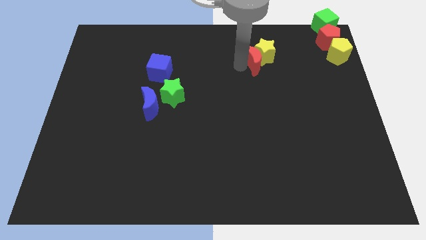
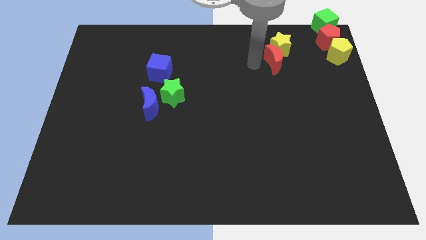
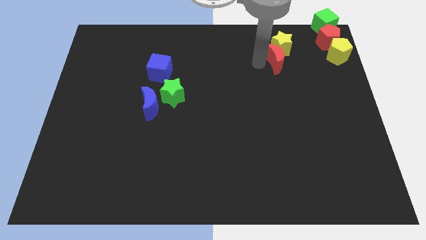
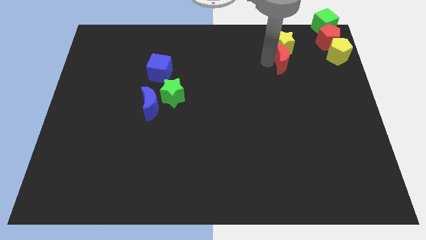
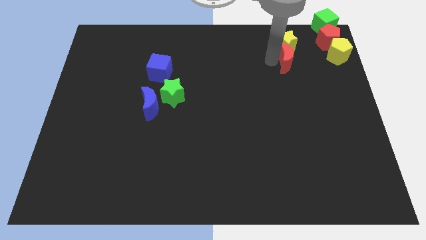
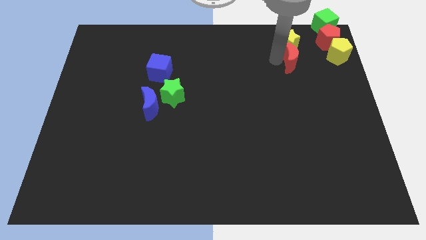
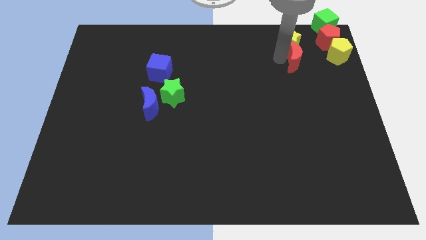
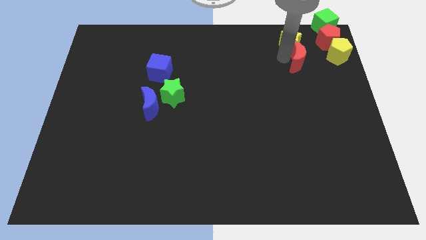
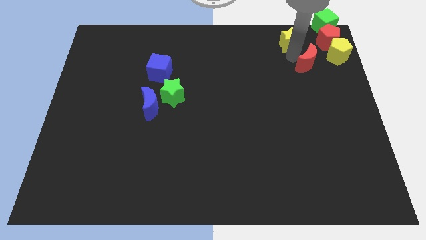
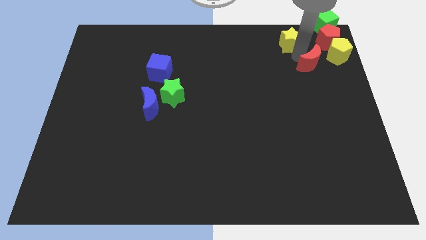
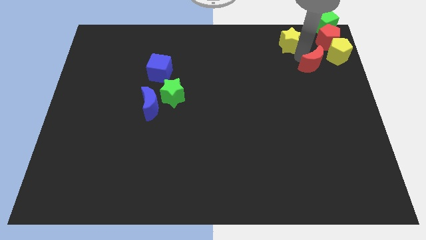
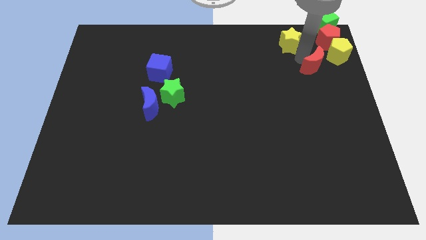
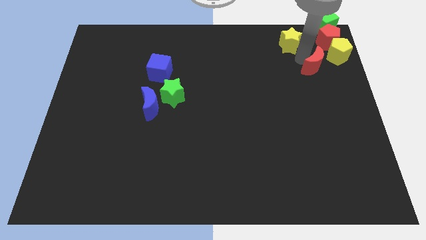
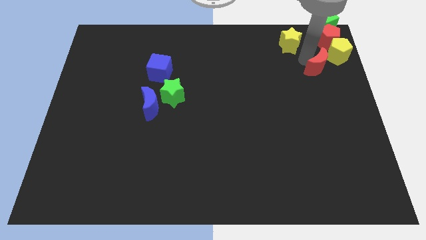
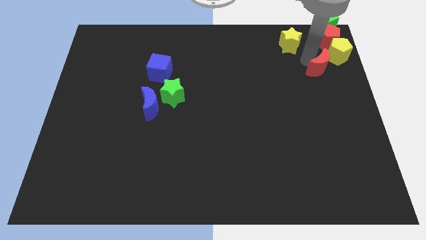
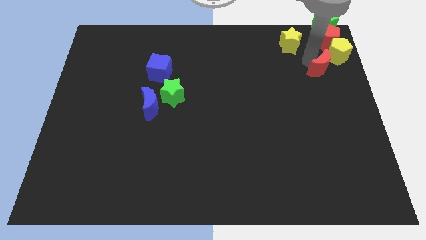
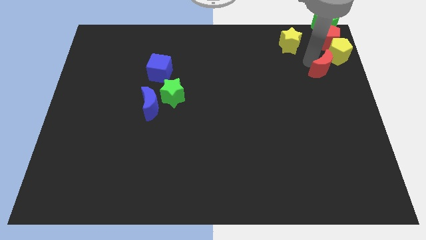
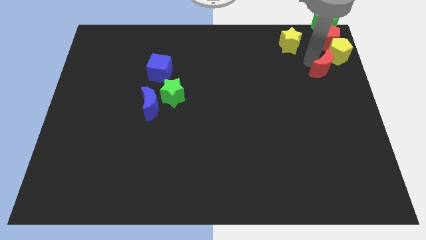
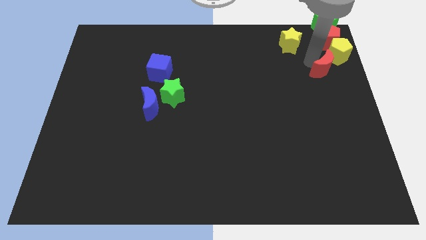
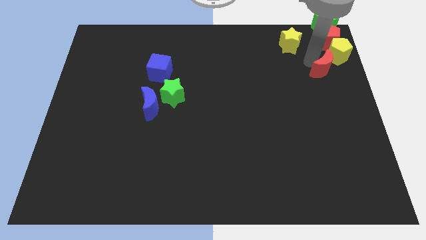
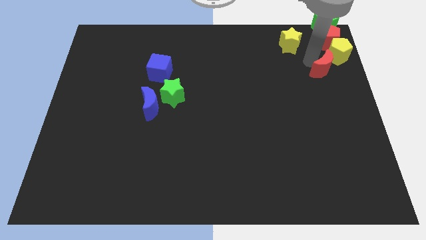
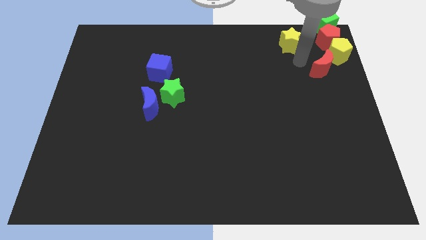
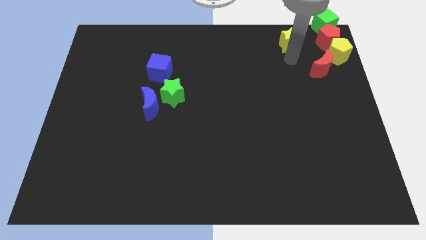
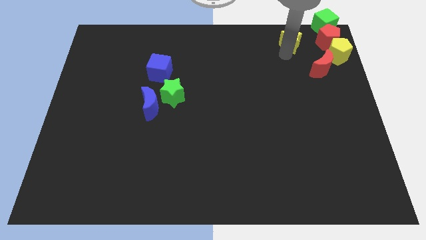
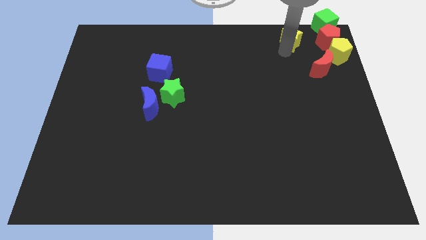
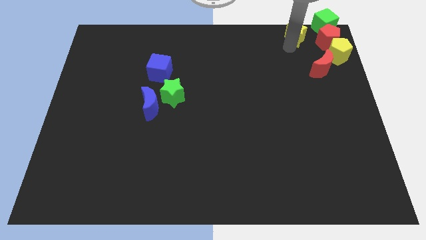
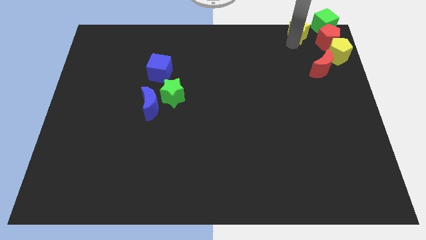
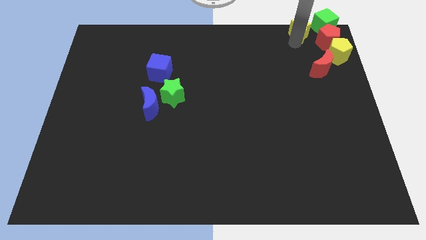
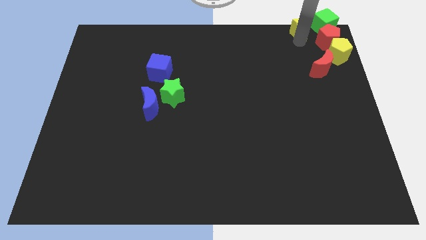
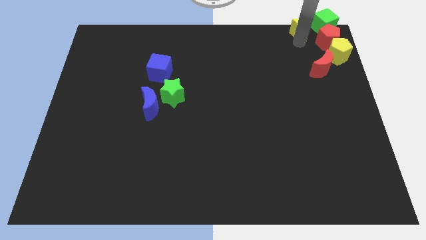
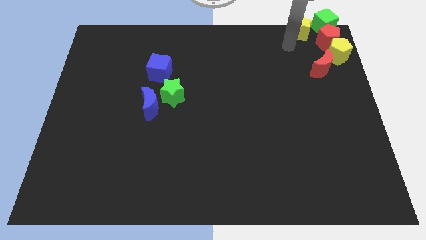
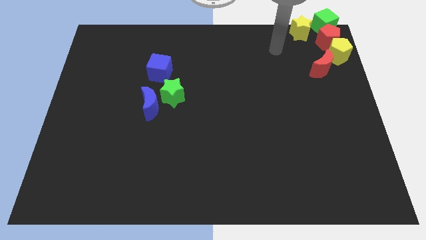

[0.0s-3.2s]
place yellow star beside green cube

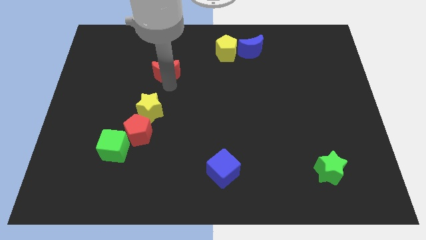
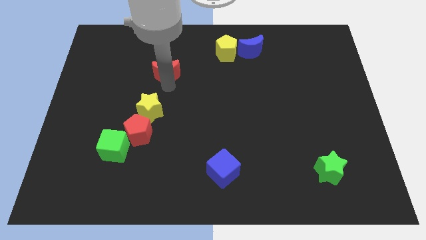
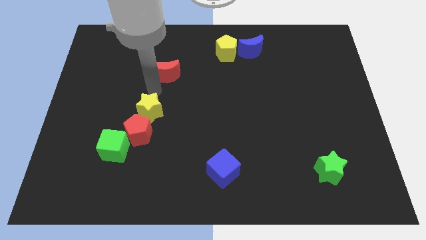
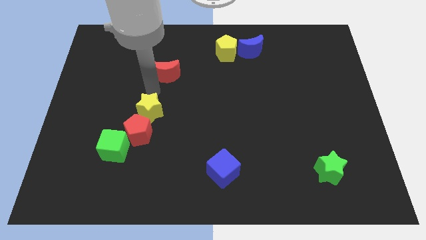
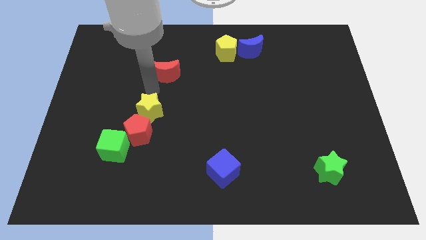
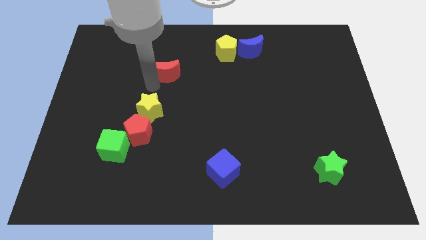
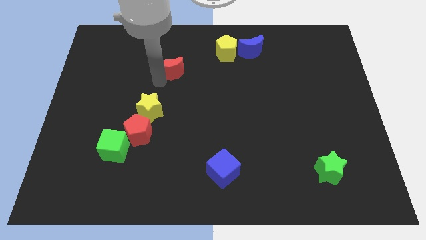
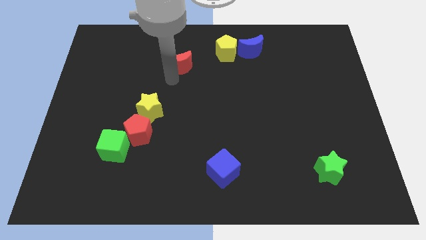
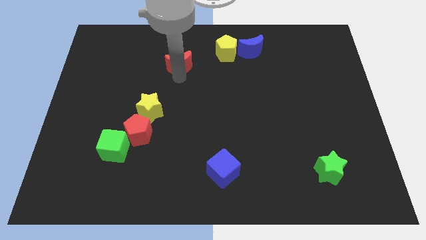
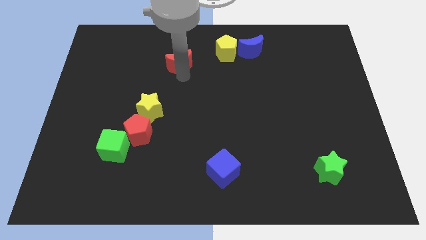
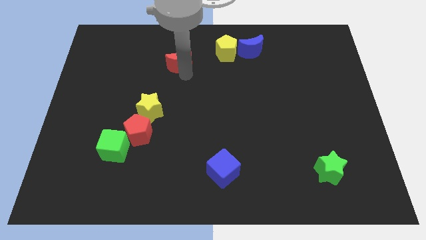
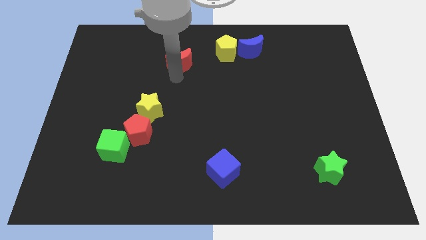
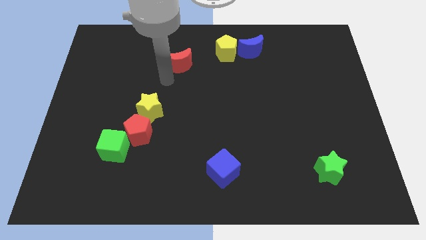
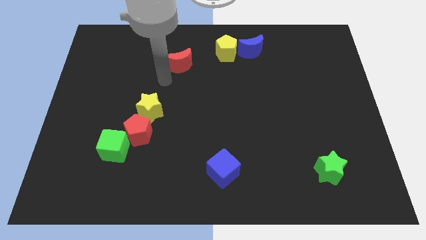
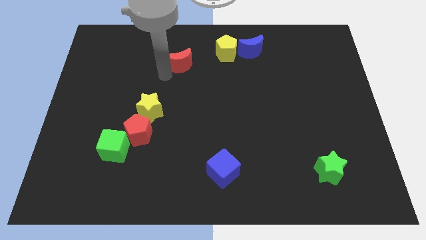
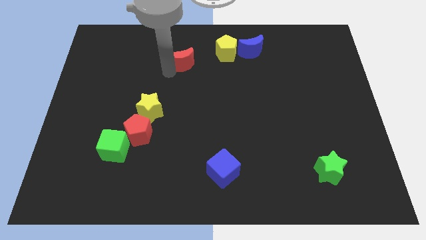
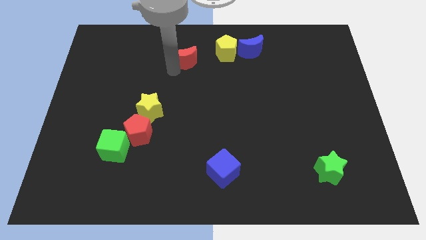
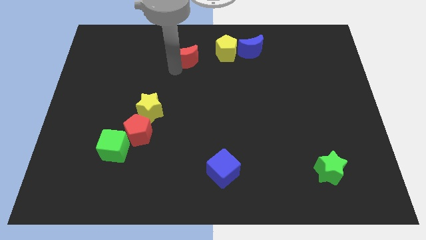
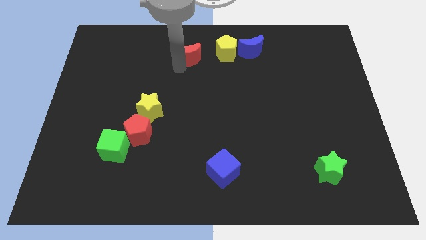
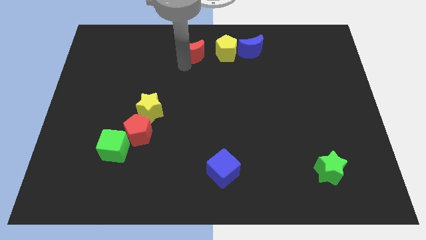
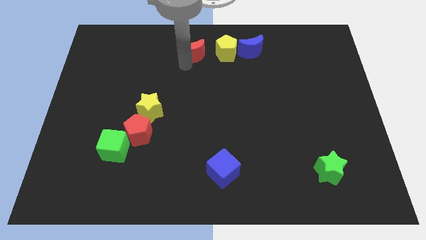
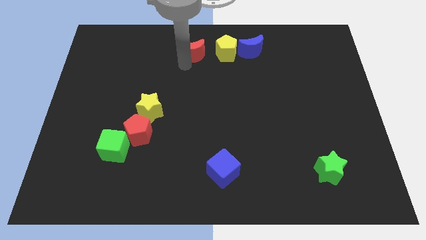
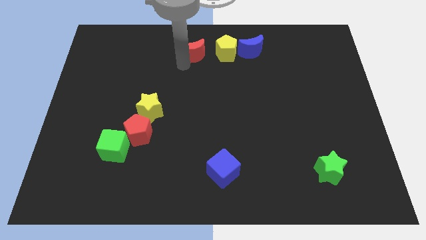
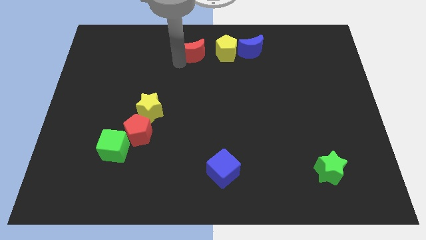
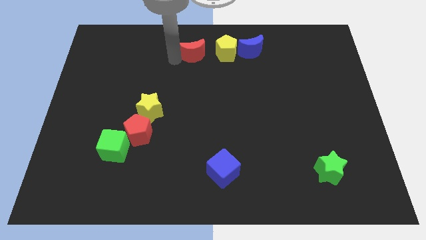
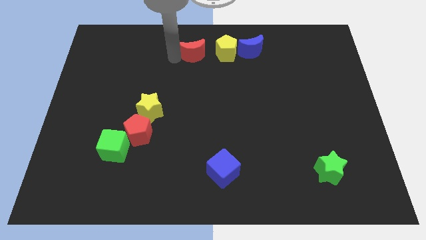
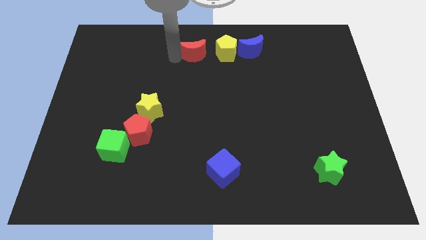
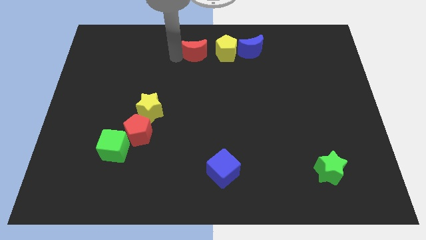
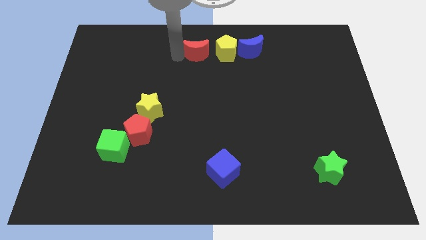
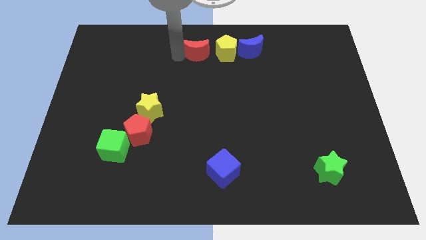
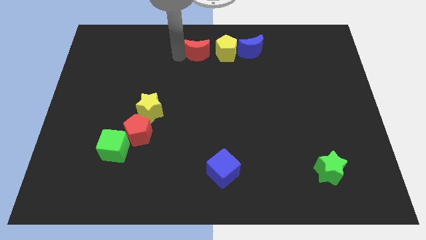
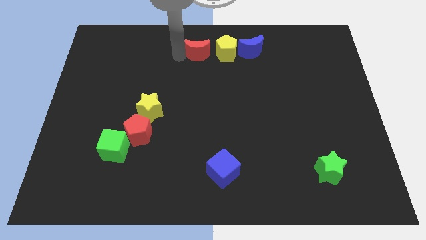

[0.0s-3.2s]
place the red moon on the left of the yellow pentagon

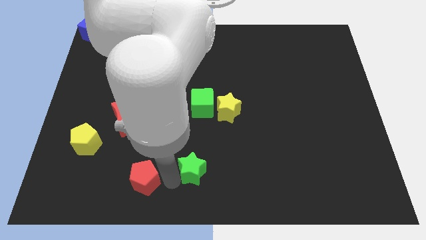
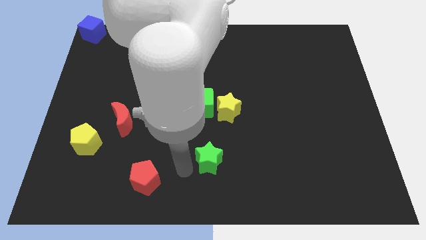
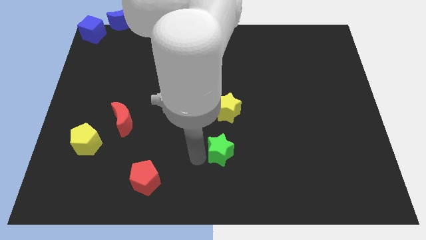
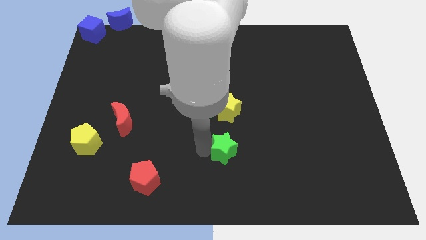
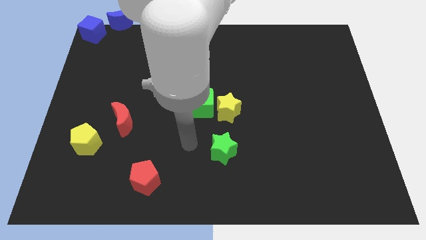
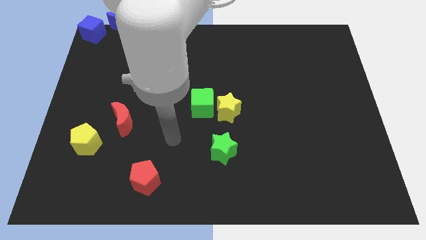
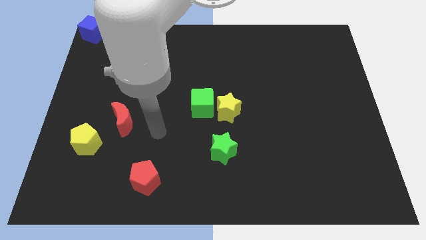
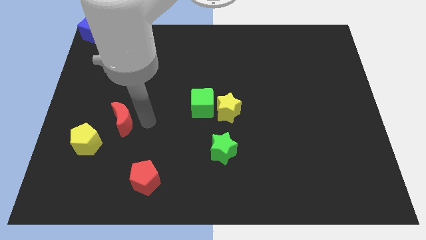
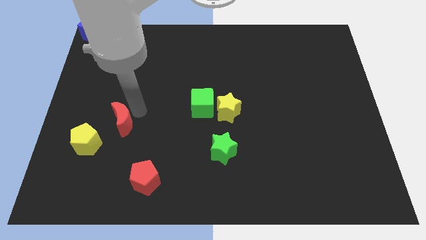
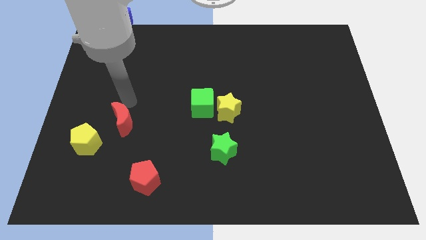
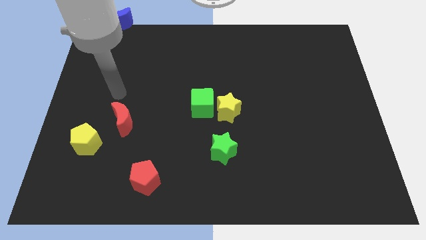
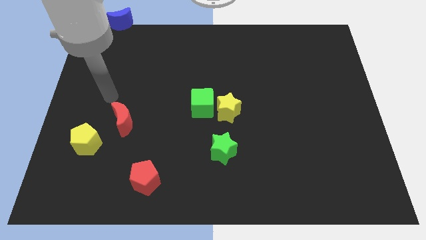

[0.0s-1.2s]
push the green star to the bottom of the yellow star

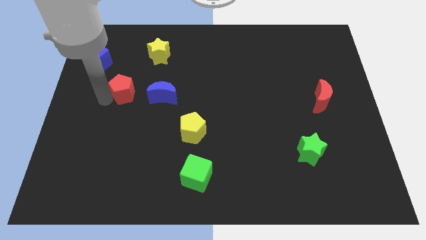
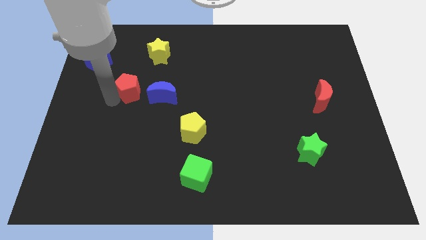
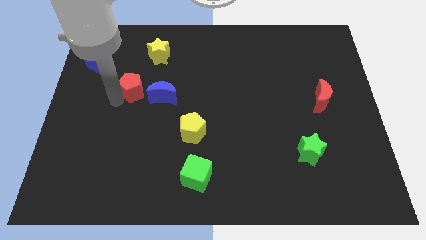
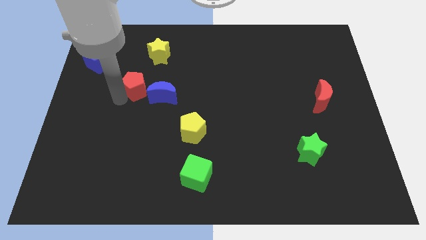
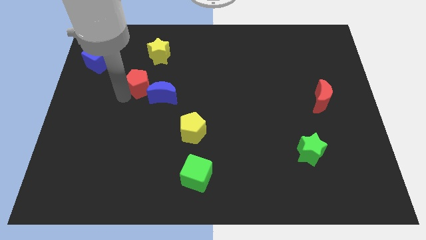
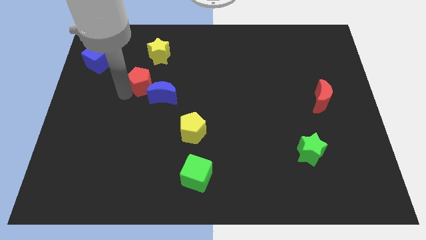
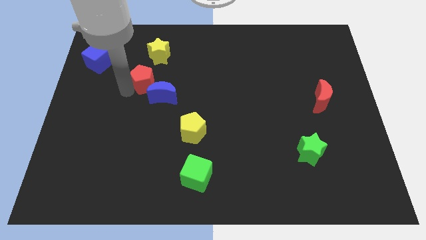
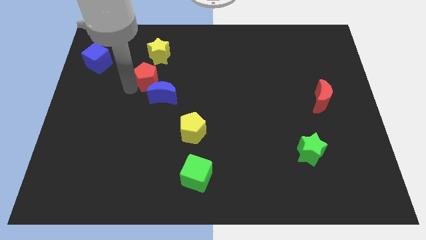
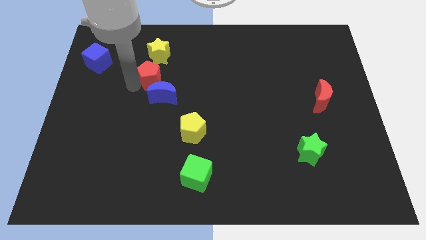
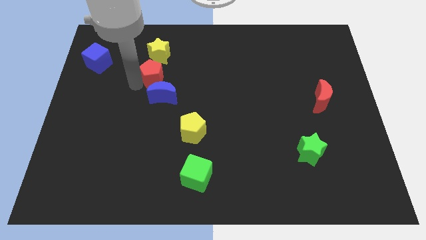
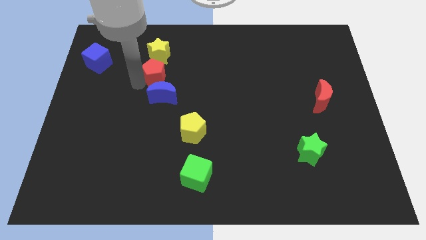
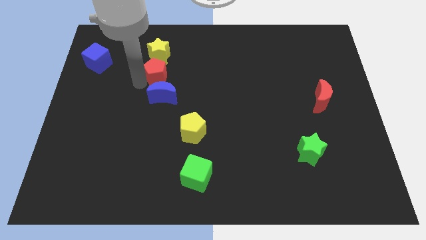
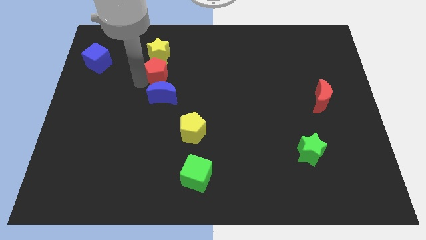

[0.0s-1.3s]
put red pentagon below yellow star

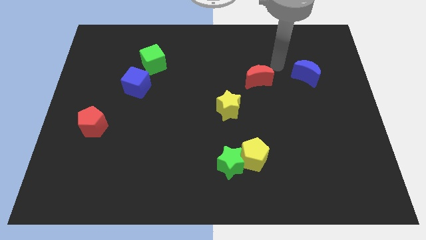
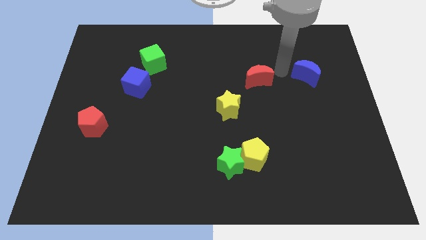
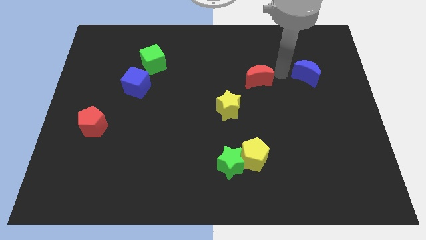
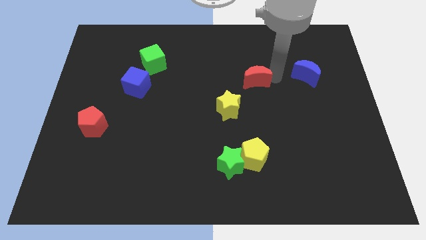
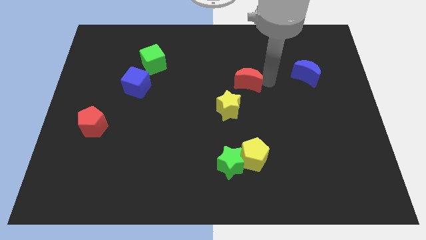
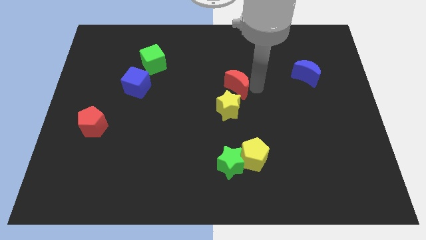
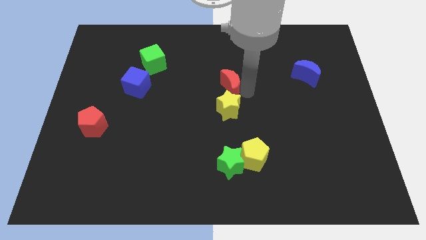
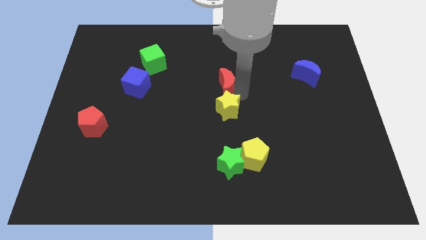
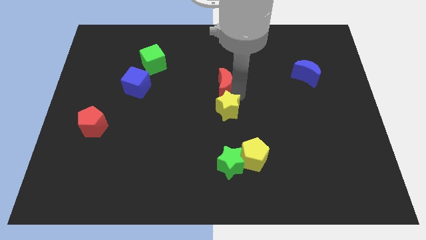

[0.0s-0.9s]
place the red crescent above the yellow star
